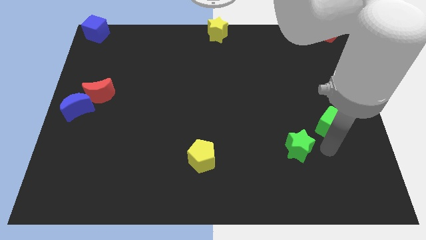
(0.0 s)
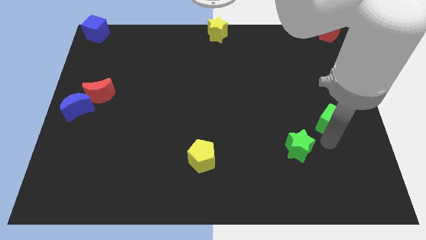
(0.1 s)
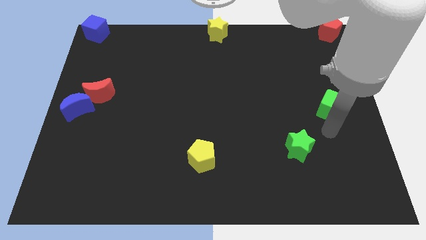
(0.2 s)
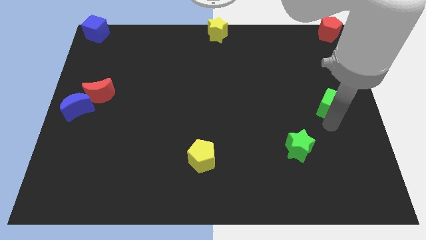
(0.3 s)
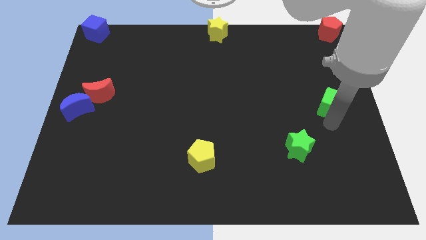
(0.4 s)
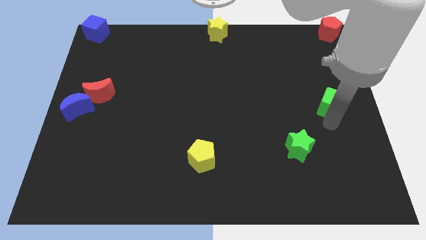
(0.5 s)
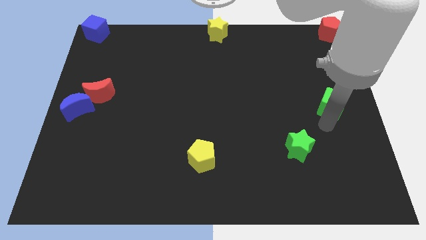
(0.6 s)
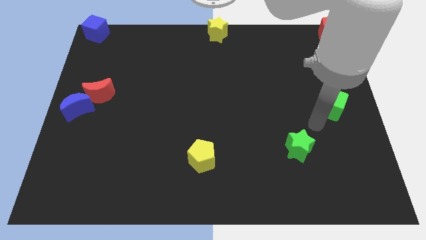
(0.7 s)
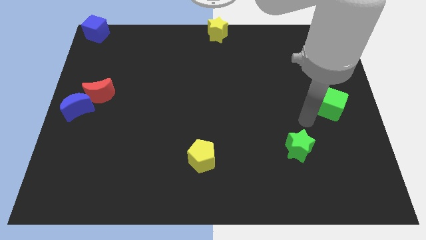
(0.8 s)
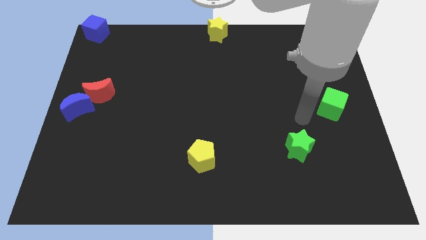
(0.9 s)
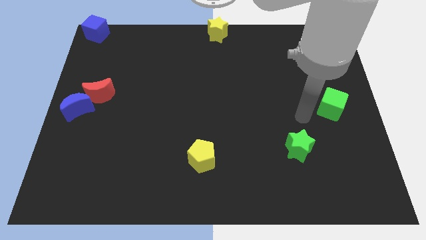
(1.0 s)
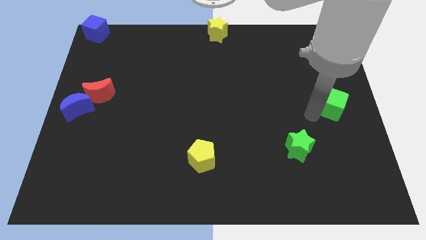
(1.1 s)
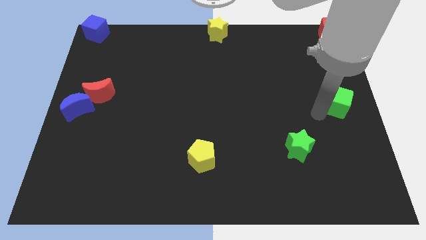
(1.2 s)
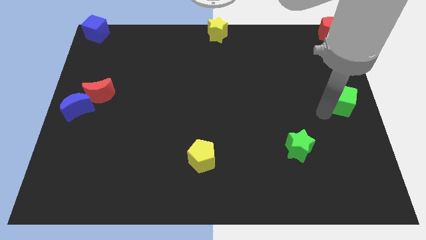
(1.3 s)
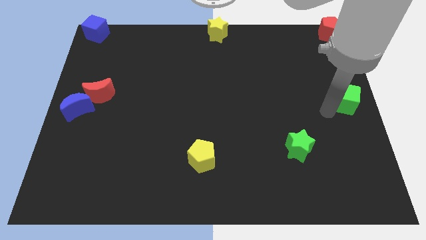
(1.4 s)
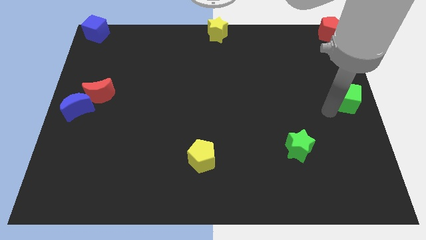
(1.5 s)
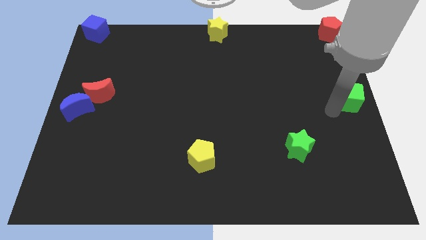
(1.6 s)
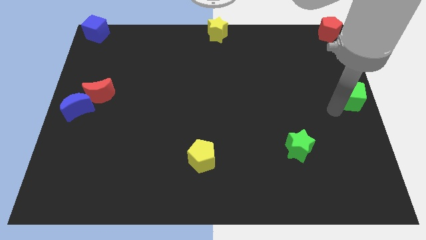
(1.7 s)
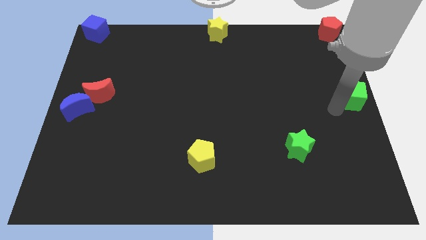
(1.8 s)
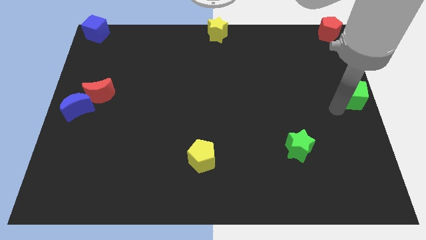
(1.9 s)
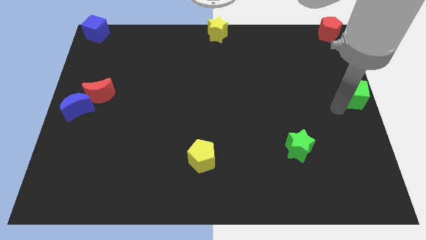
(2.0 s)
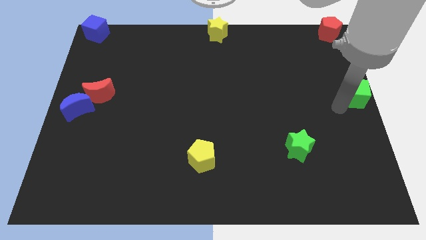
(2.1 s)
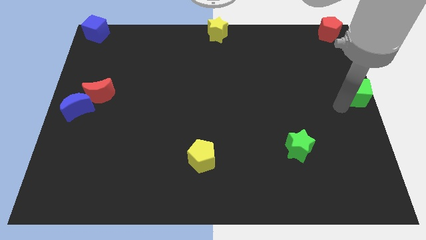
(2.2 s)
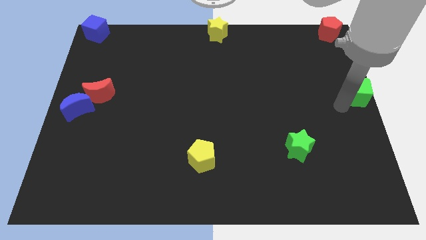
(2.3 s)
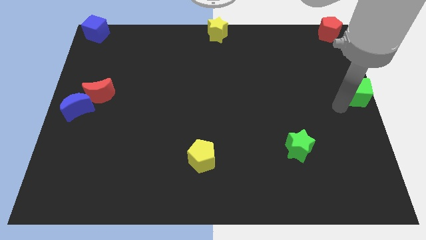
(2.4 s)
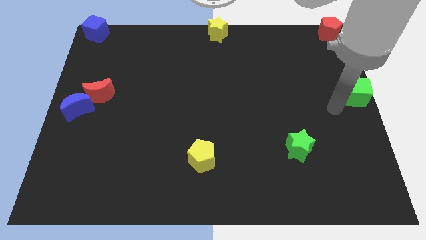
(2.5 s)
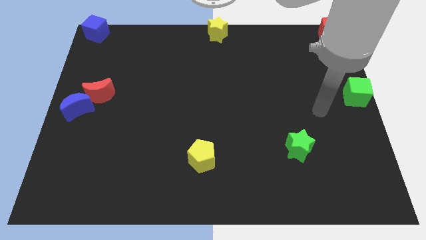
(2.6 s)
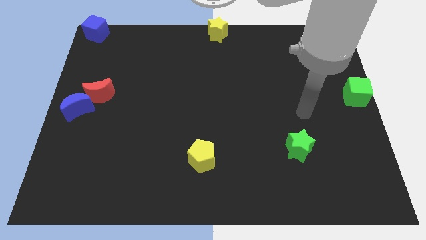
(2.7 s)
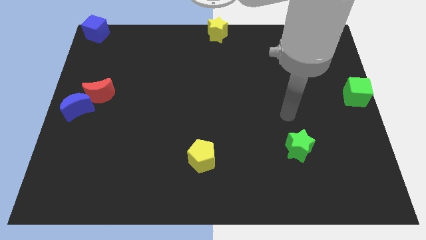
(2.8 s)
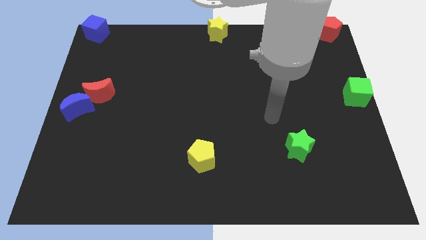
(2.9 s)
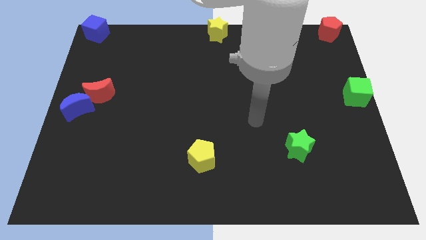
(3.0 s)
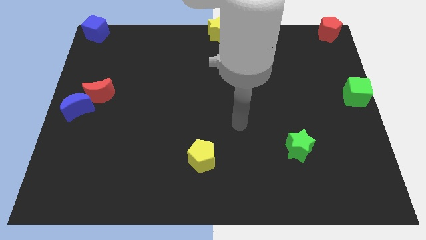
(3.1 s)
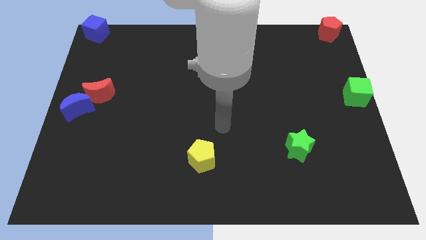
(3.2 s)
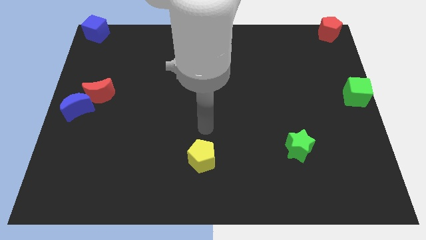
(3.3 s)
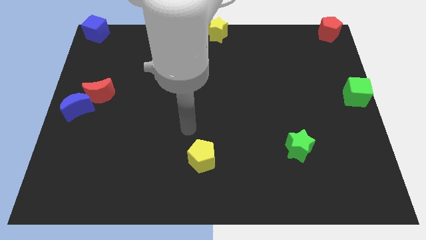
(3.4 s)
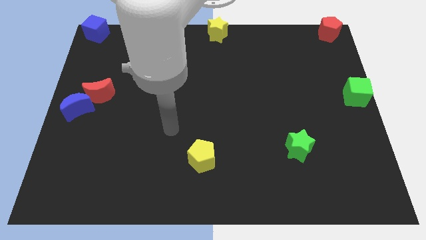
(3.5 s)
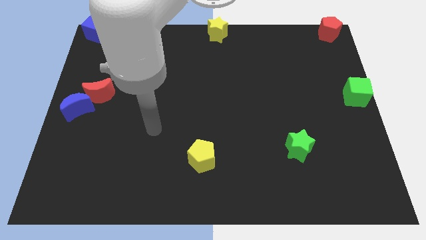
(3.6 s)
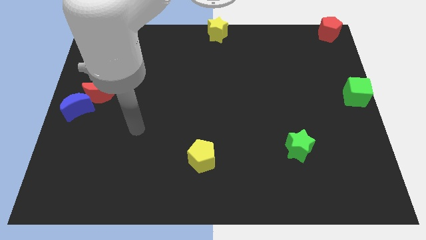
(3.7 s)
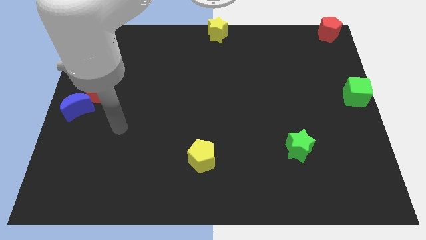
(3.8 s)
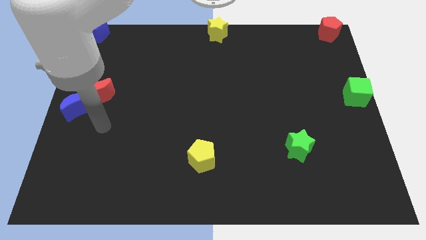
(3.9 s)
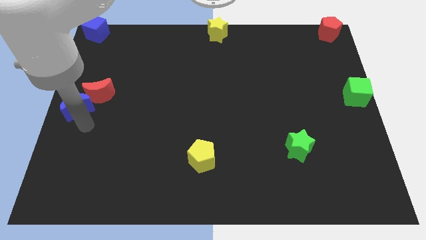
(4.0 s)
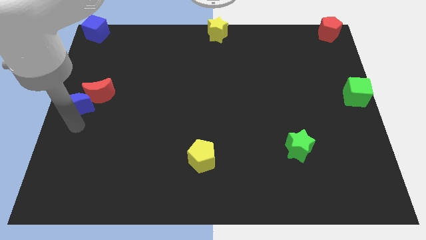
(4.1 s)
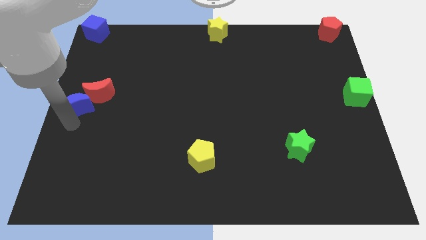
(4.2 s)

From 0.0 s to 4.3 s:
move the green cube to the centre right of the board

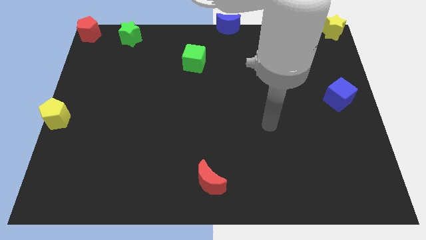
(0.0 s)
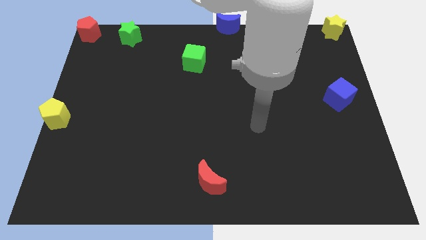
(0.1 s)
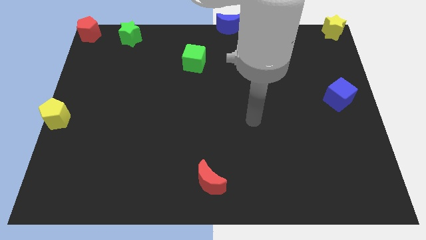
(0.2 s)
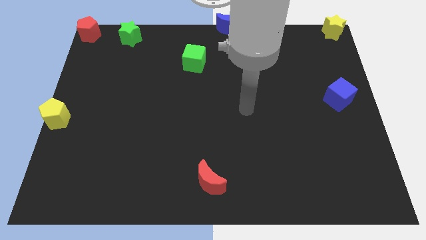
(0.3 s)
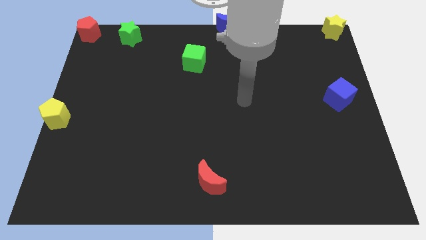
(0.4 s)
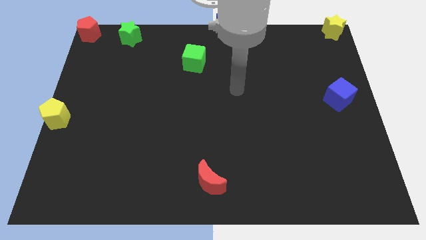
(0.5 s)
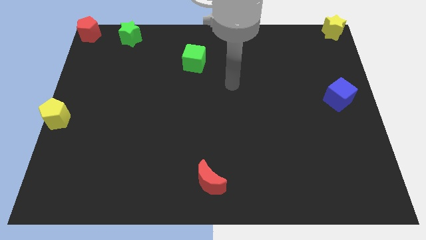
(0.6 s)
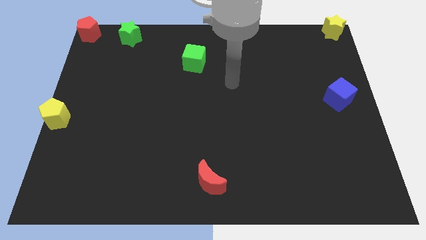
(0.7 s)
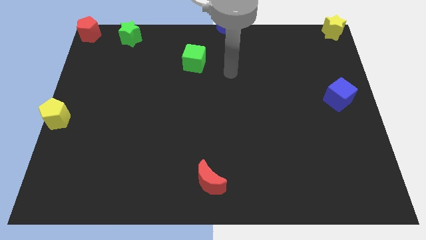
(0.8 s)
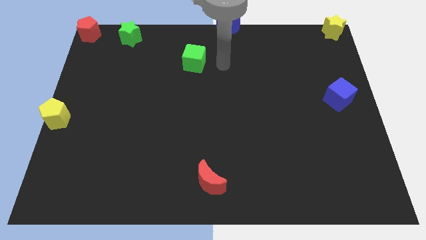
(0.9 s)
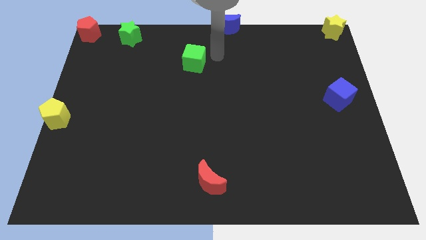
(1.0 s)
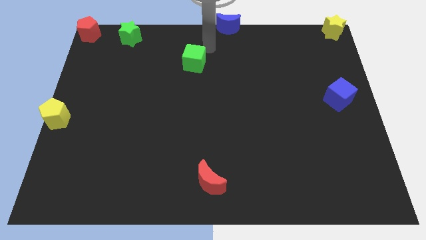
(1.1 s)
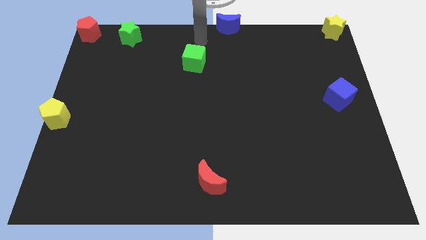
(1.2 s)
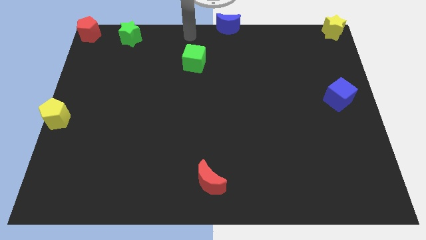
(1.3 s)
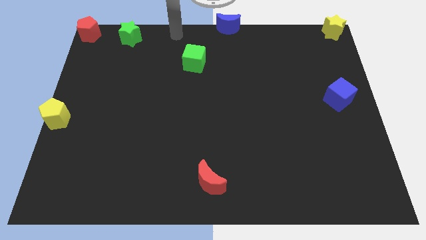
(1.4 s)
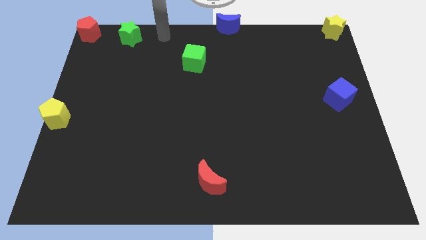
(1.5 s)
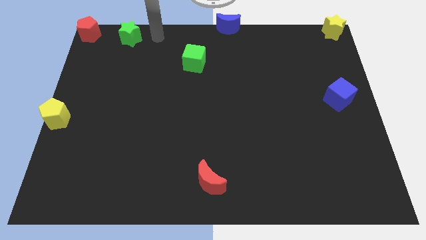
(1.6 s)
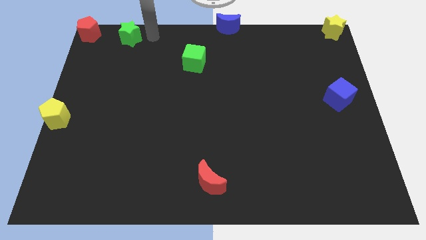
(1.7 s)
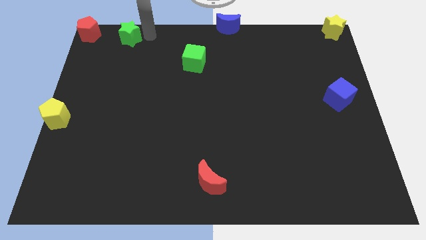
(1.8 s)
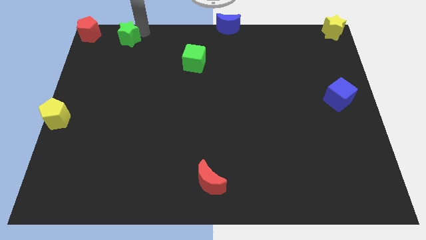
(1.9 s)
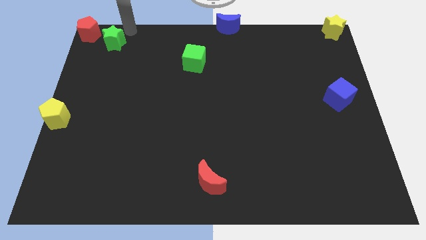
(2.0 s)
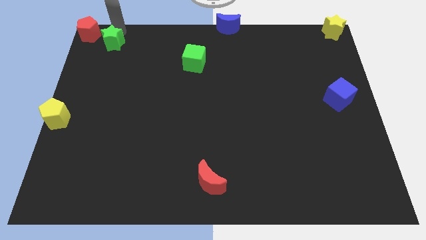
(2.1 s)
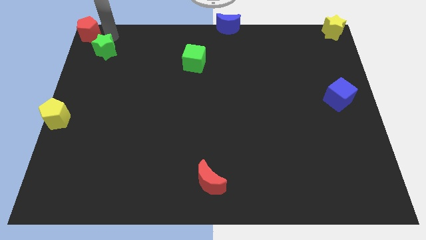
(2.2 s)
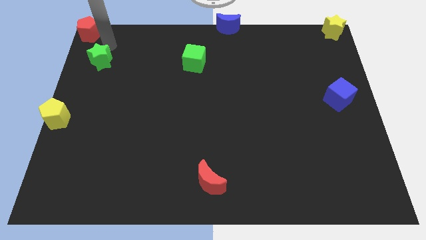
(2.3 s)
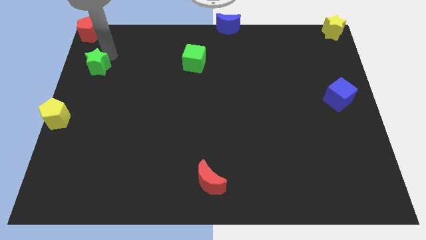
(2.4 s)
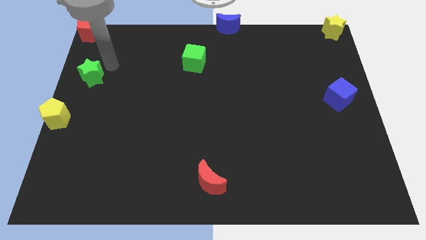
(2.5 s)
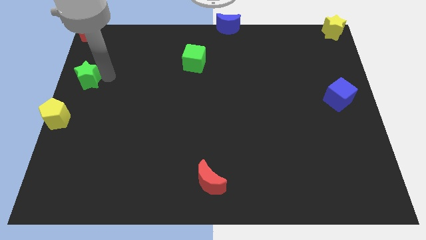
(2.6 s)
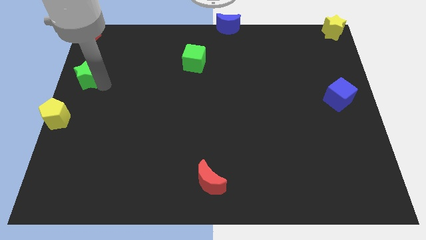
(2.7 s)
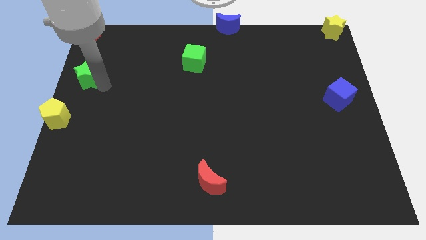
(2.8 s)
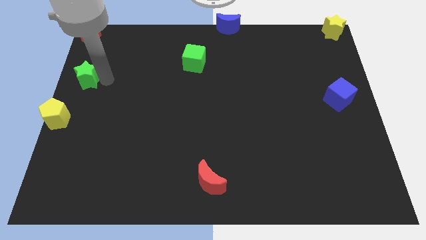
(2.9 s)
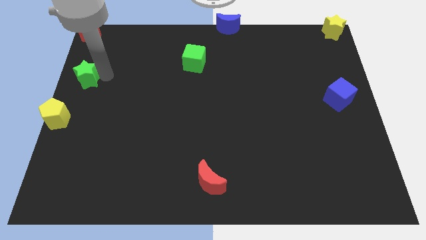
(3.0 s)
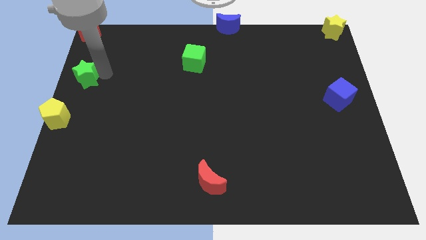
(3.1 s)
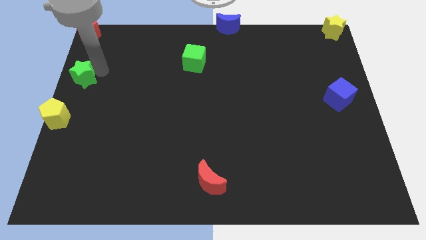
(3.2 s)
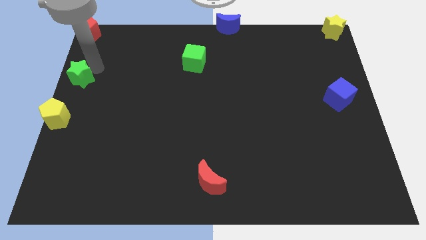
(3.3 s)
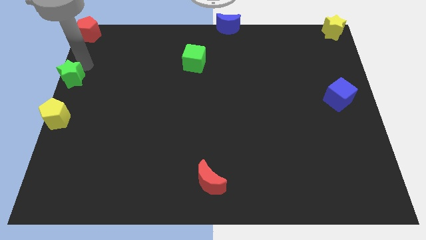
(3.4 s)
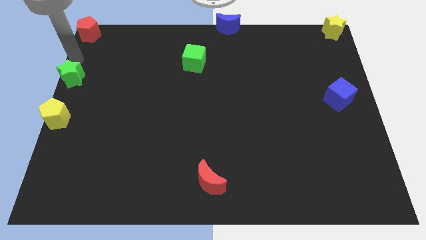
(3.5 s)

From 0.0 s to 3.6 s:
place the green star vertically above the yellow pentagon

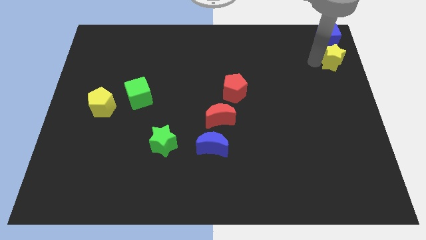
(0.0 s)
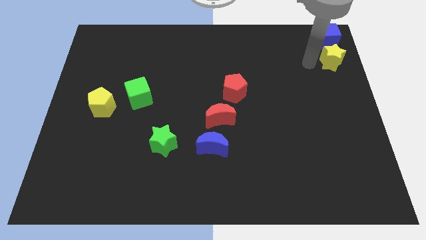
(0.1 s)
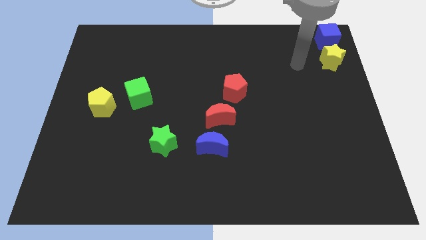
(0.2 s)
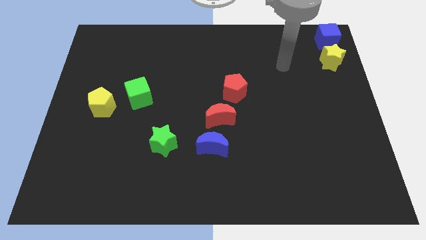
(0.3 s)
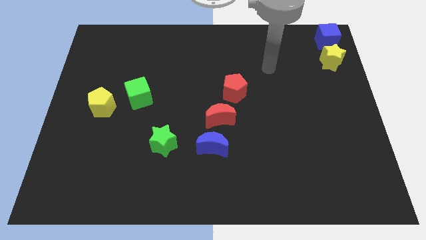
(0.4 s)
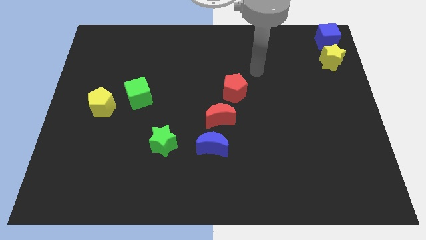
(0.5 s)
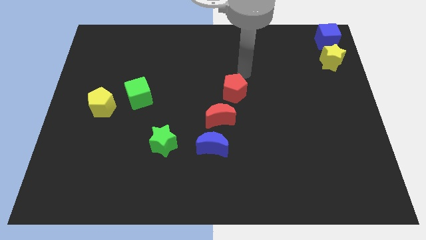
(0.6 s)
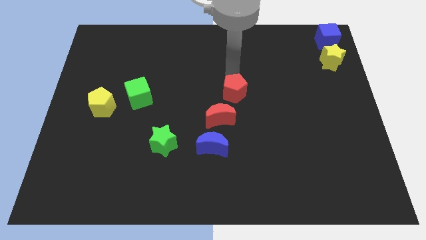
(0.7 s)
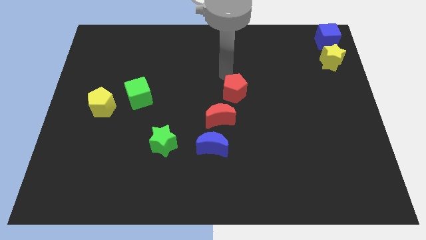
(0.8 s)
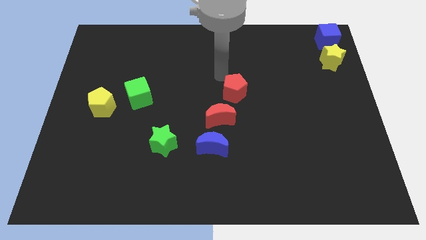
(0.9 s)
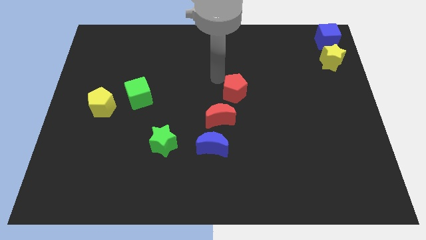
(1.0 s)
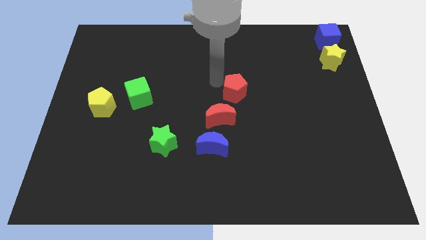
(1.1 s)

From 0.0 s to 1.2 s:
move your arm left to the red pentagon
